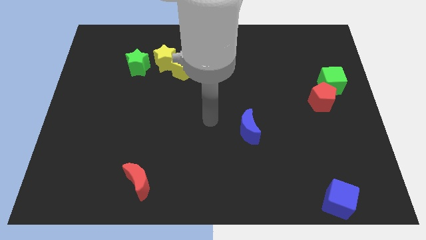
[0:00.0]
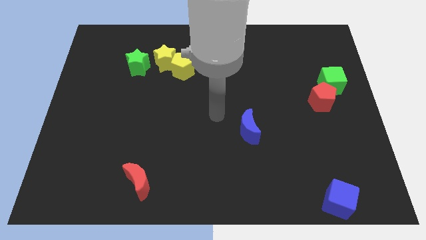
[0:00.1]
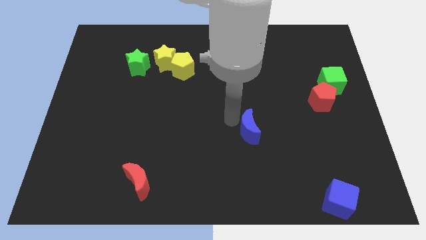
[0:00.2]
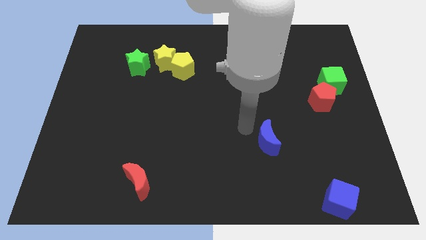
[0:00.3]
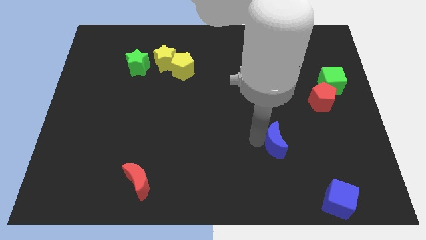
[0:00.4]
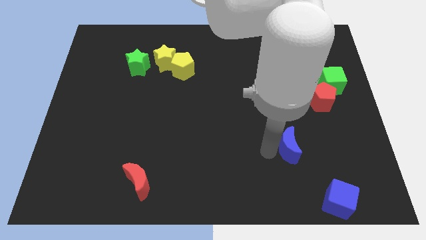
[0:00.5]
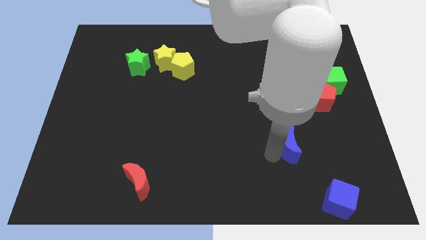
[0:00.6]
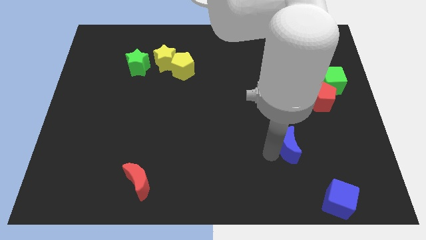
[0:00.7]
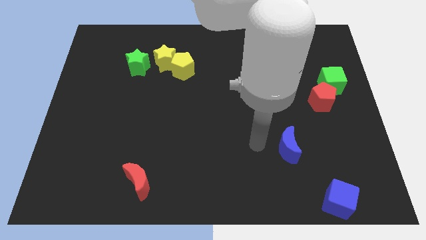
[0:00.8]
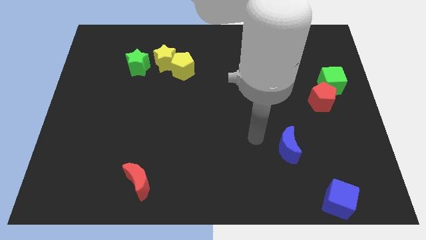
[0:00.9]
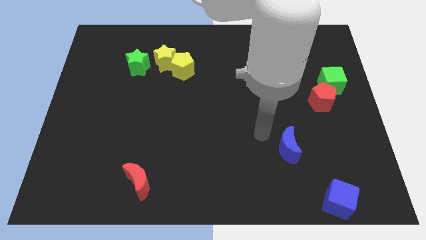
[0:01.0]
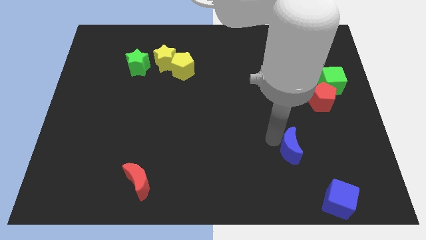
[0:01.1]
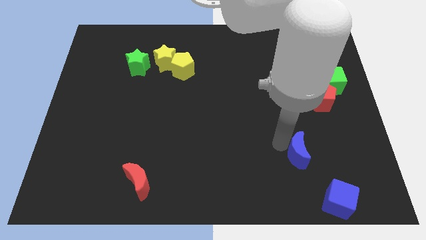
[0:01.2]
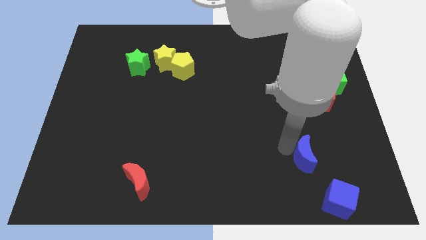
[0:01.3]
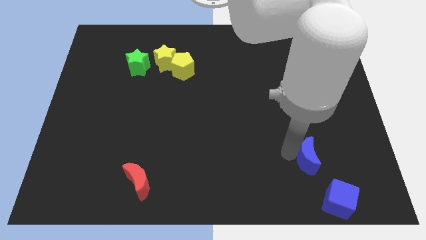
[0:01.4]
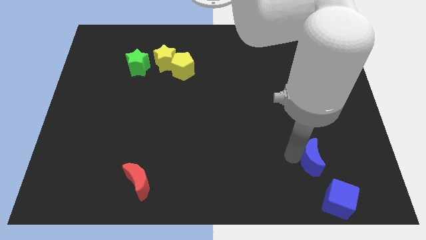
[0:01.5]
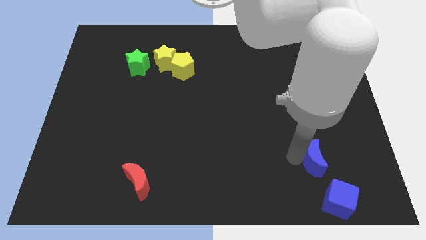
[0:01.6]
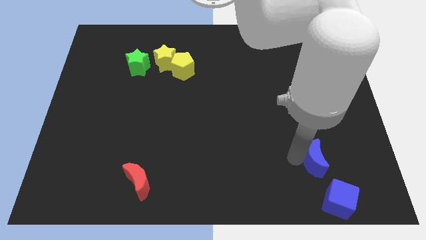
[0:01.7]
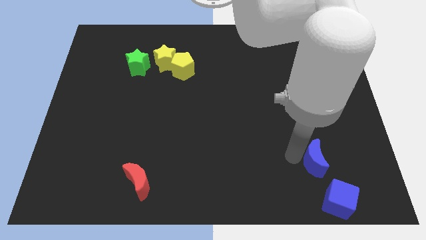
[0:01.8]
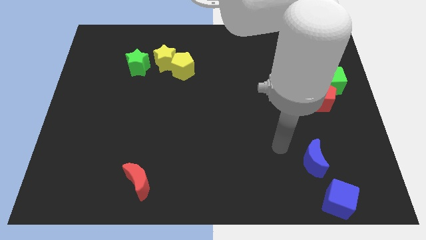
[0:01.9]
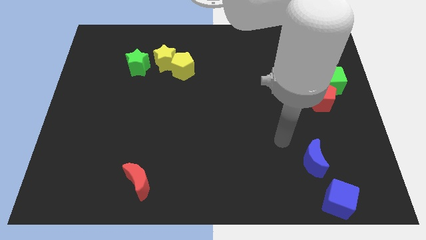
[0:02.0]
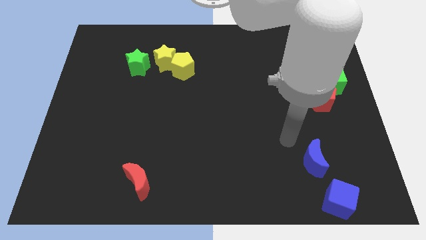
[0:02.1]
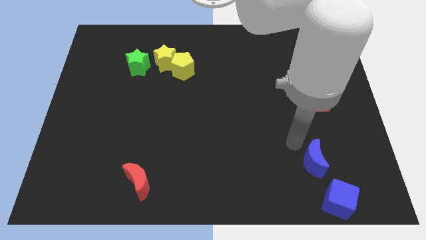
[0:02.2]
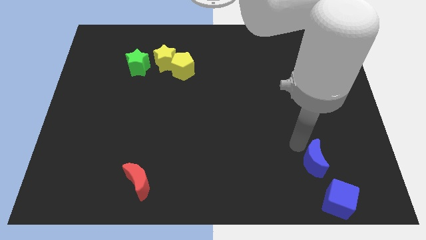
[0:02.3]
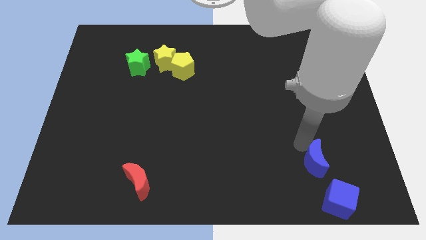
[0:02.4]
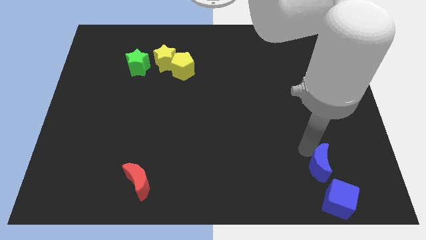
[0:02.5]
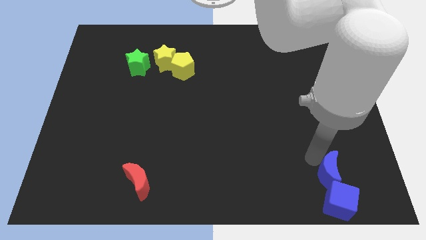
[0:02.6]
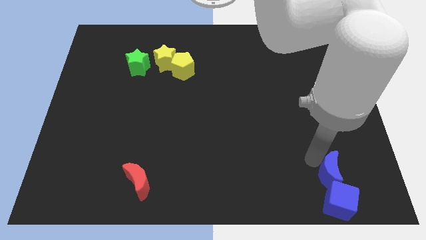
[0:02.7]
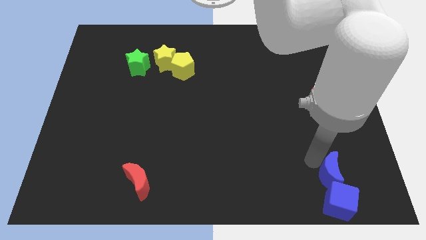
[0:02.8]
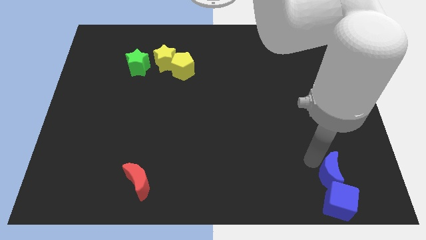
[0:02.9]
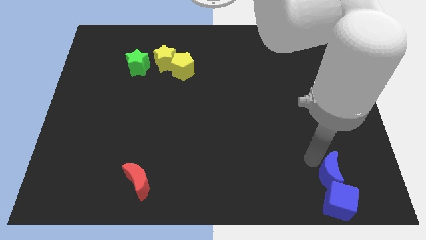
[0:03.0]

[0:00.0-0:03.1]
put the blue crescent at the top of the blue cube

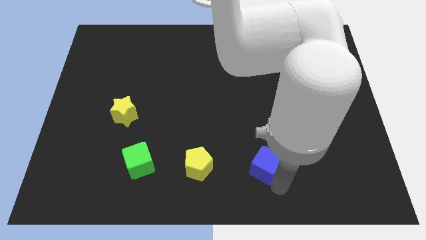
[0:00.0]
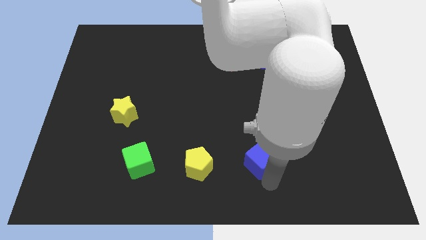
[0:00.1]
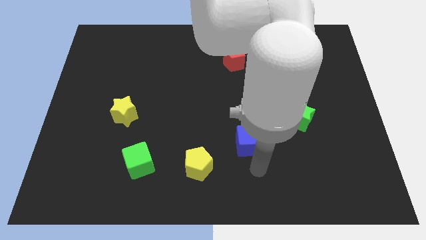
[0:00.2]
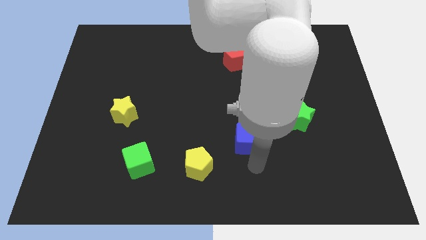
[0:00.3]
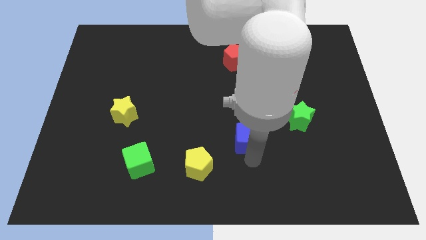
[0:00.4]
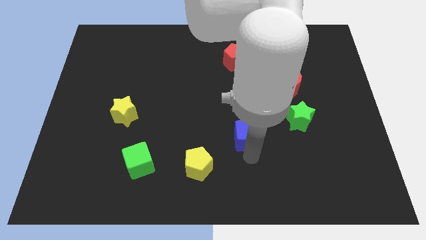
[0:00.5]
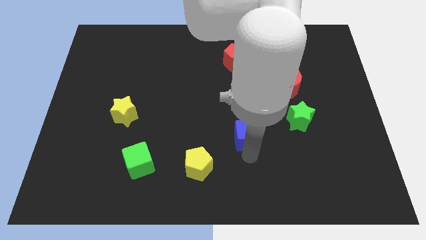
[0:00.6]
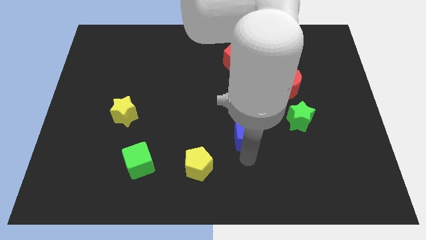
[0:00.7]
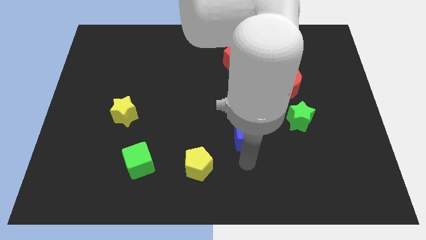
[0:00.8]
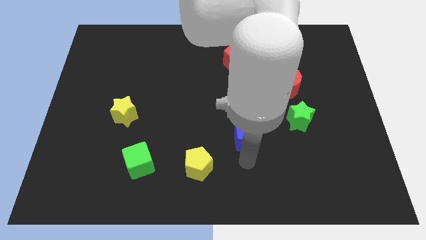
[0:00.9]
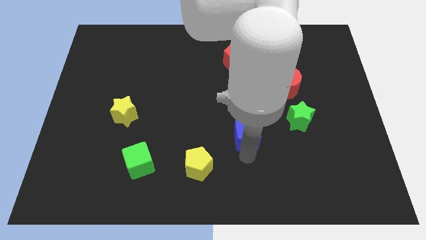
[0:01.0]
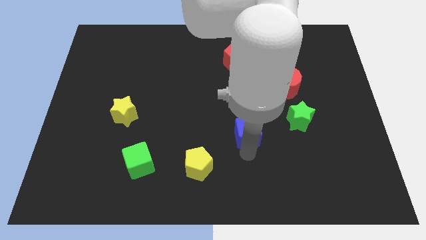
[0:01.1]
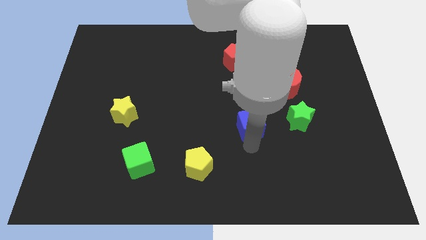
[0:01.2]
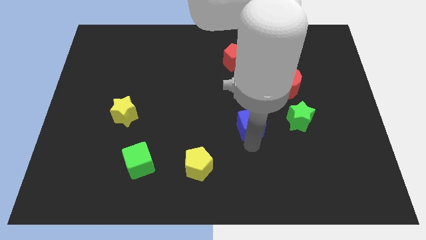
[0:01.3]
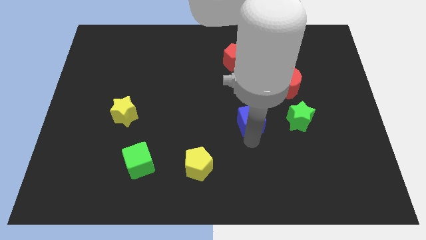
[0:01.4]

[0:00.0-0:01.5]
move blue cube to the left side of the green star

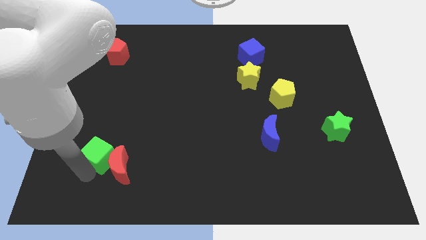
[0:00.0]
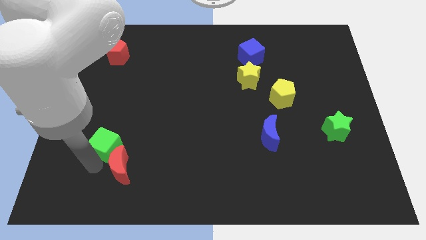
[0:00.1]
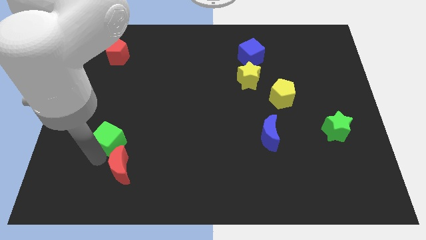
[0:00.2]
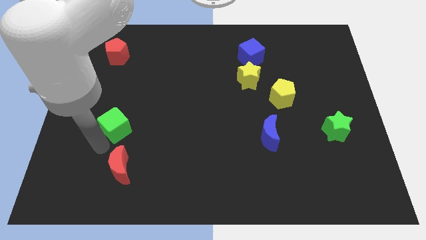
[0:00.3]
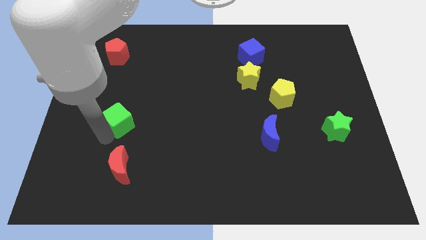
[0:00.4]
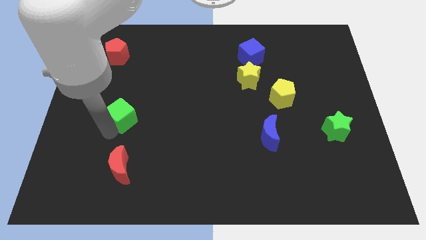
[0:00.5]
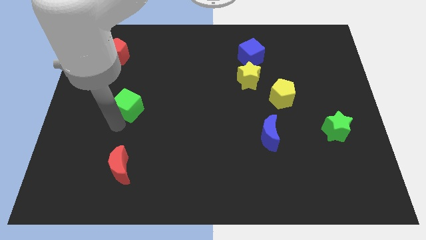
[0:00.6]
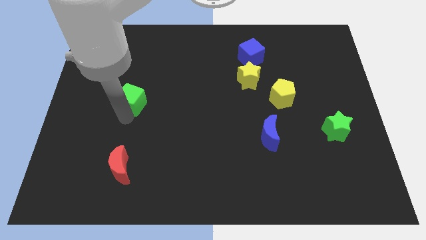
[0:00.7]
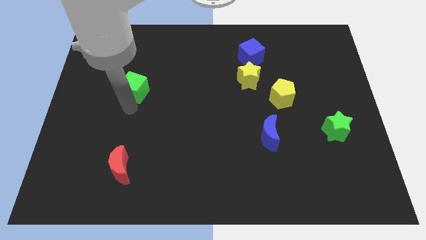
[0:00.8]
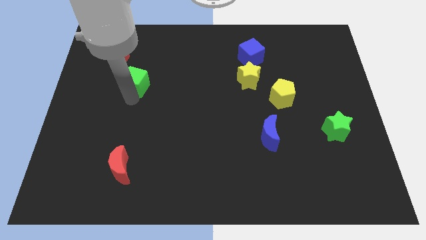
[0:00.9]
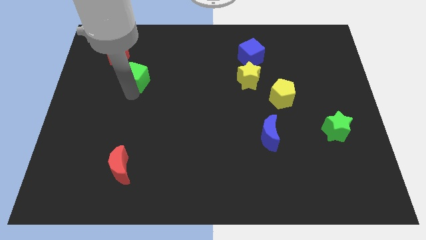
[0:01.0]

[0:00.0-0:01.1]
separate the green cube from the red moon

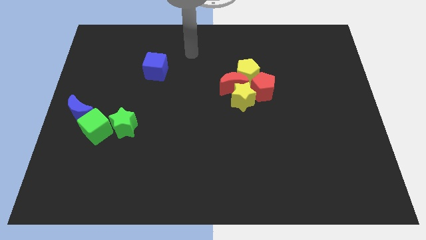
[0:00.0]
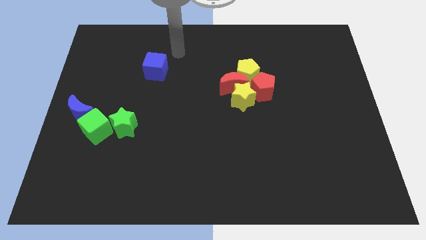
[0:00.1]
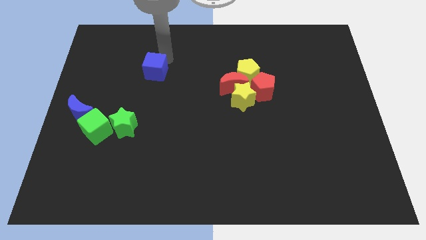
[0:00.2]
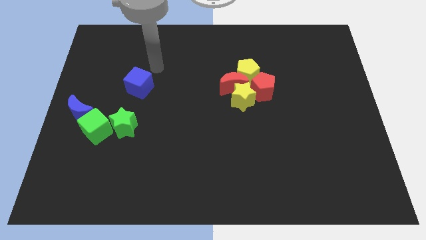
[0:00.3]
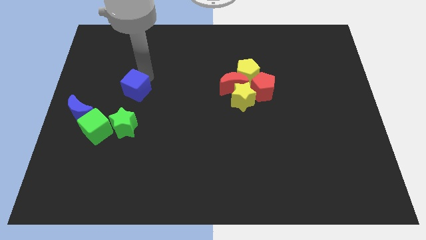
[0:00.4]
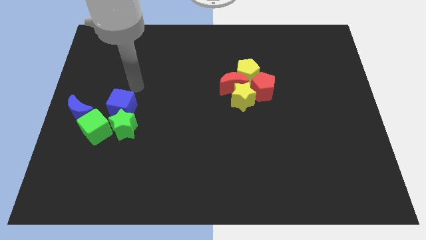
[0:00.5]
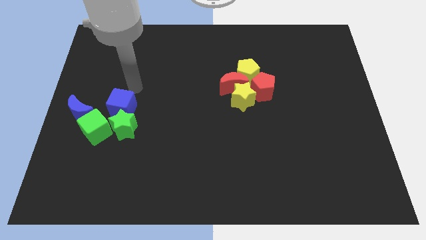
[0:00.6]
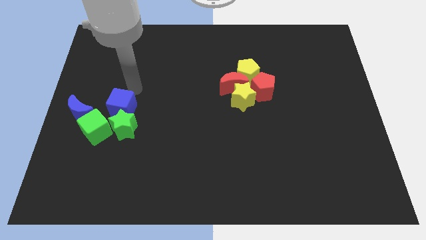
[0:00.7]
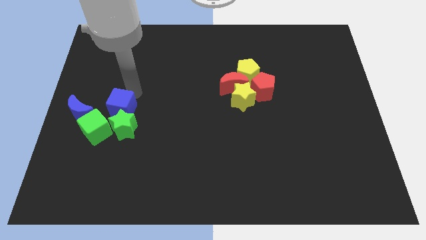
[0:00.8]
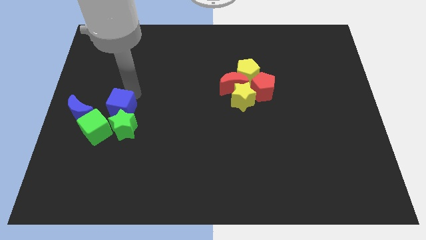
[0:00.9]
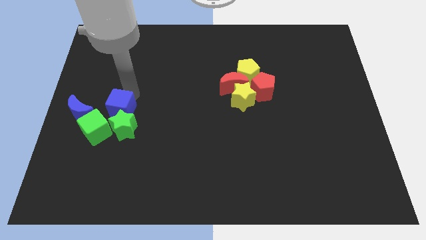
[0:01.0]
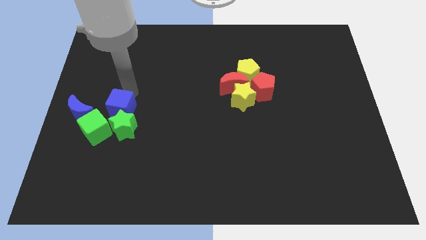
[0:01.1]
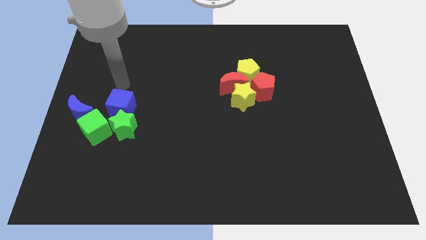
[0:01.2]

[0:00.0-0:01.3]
push the blue cube into the green star

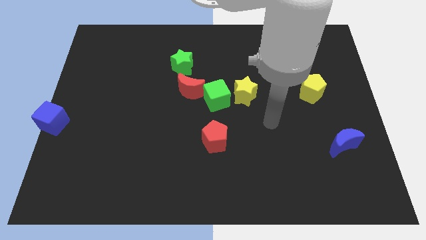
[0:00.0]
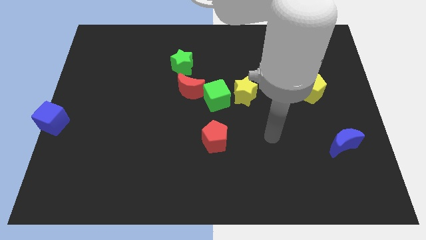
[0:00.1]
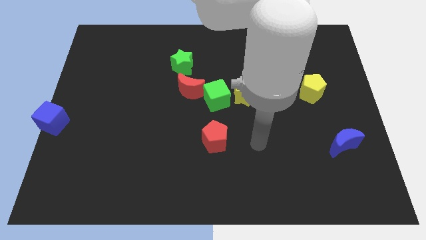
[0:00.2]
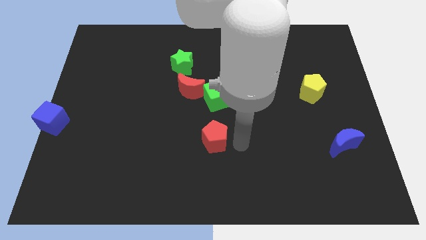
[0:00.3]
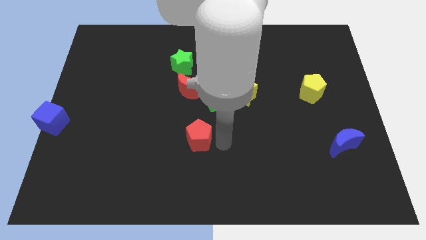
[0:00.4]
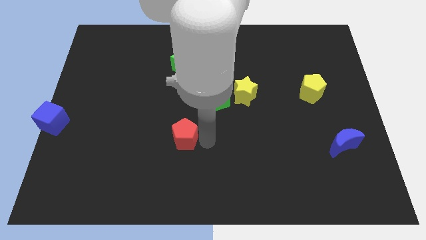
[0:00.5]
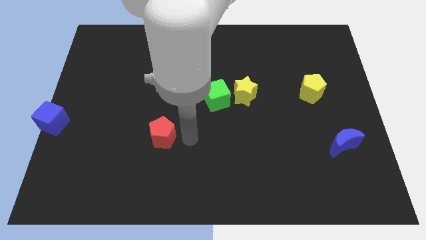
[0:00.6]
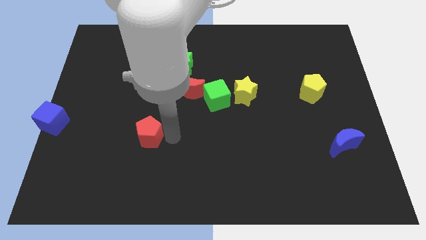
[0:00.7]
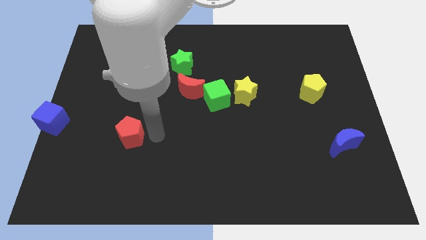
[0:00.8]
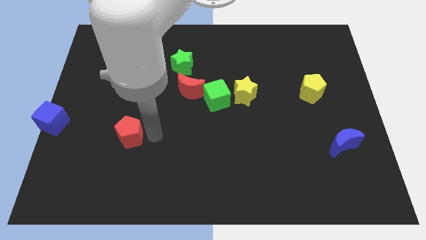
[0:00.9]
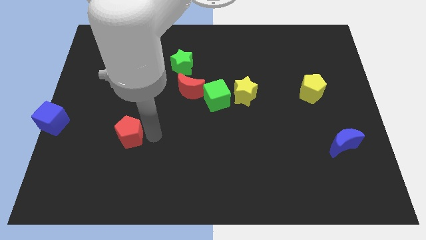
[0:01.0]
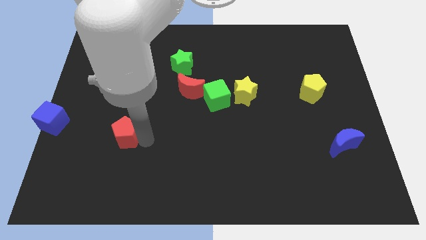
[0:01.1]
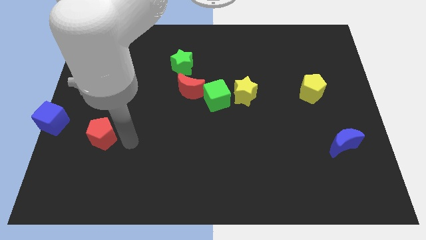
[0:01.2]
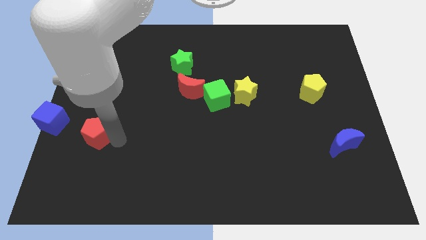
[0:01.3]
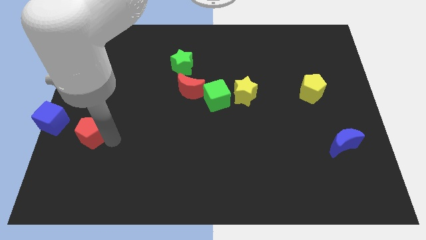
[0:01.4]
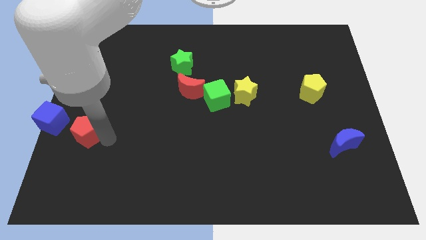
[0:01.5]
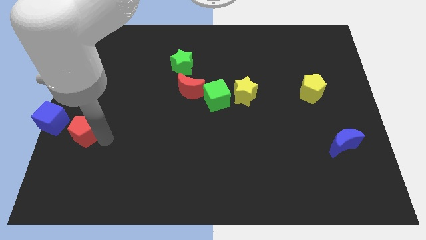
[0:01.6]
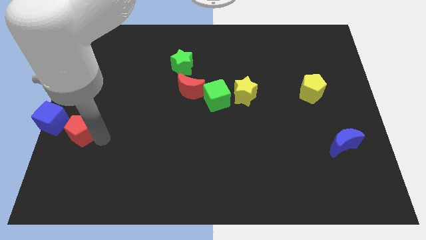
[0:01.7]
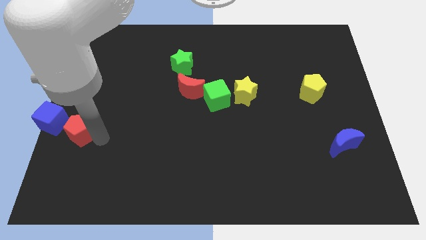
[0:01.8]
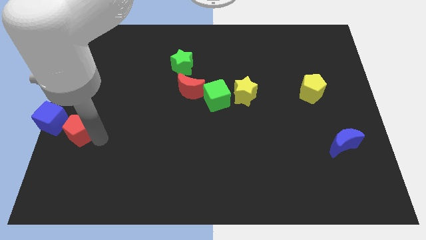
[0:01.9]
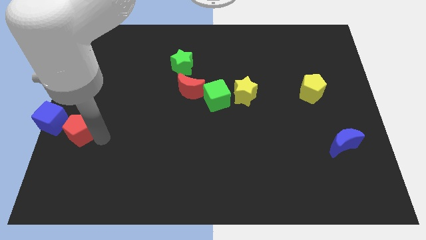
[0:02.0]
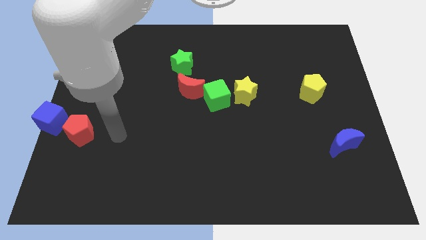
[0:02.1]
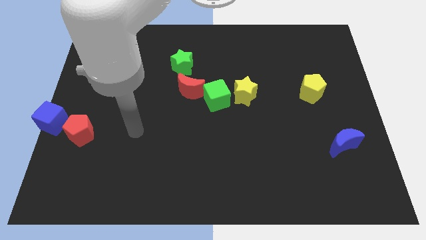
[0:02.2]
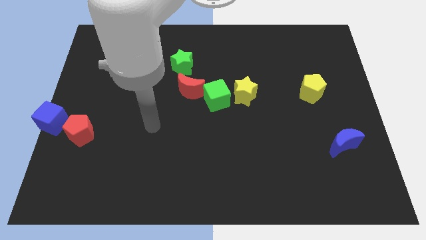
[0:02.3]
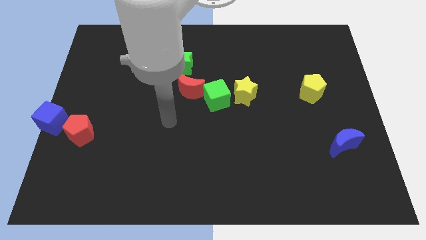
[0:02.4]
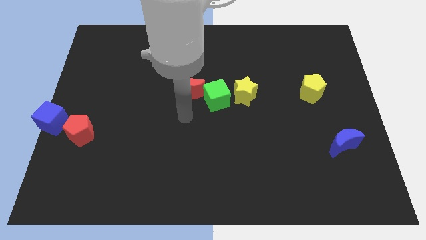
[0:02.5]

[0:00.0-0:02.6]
move the red pentagon close to the blue cube
